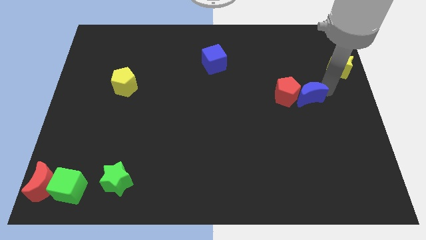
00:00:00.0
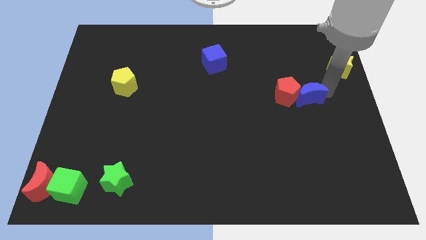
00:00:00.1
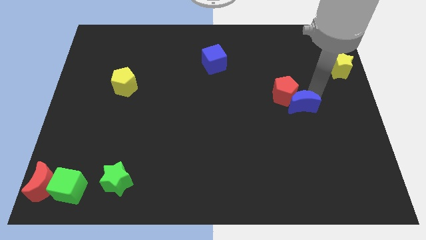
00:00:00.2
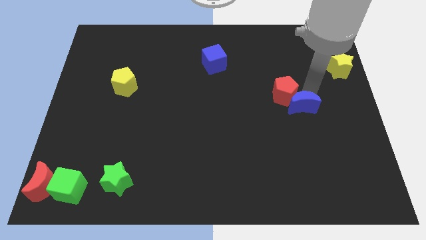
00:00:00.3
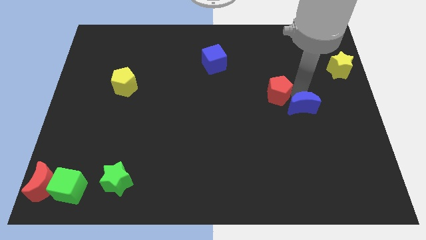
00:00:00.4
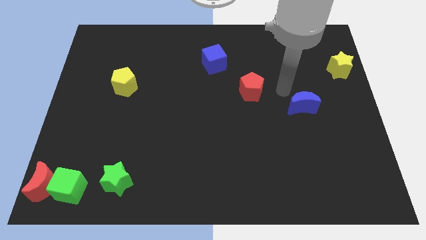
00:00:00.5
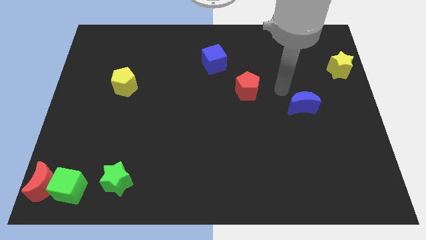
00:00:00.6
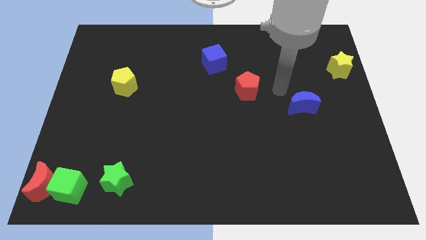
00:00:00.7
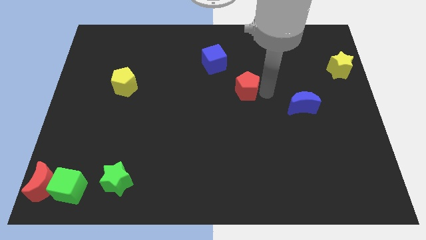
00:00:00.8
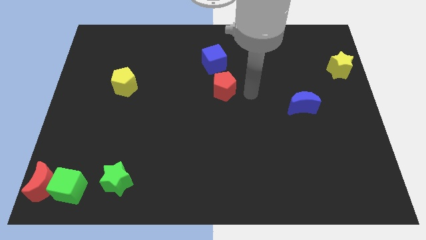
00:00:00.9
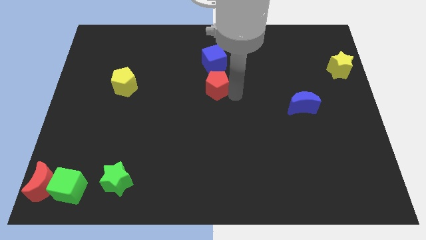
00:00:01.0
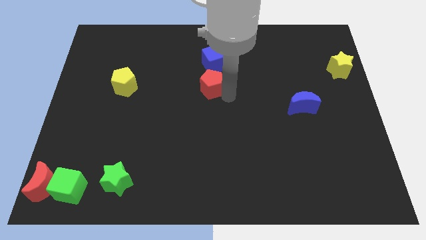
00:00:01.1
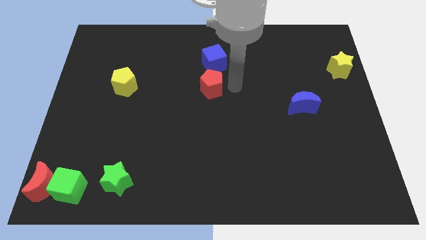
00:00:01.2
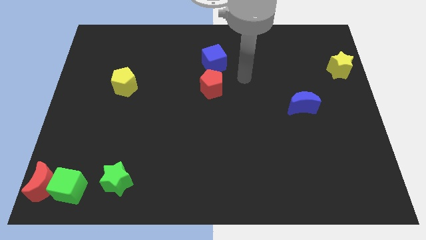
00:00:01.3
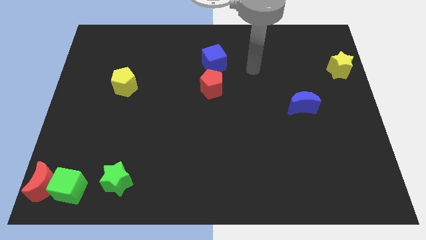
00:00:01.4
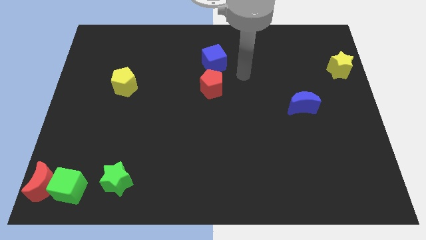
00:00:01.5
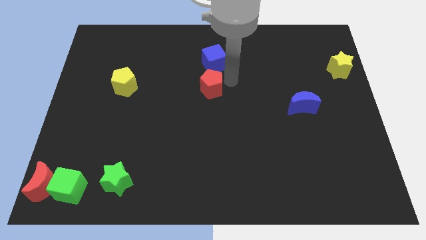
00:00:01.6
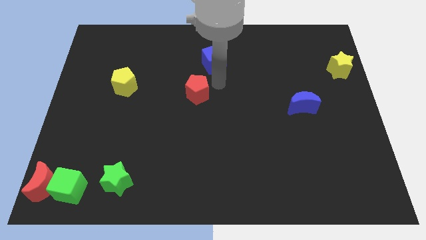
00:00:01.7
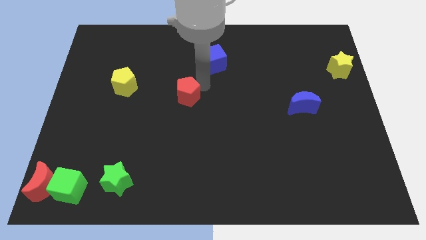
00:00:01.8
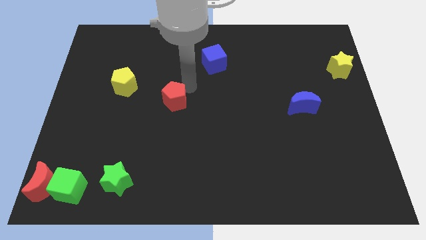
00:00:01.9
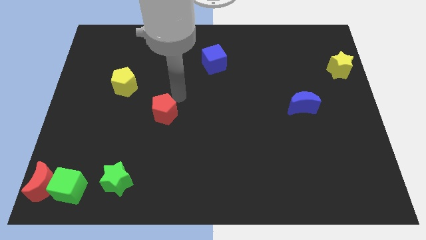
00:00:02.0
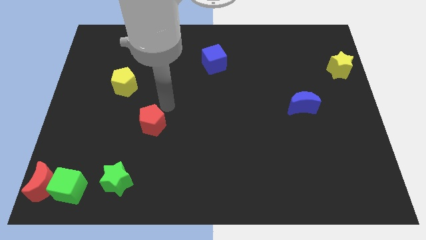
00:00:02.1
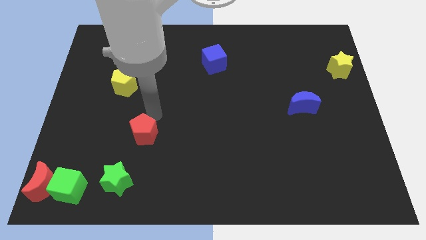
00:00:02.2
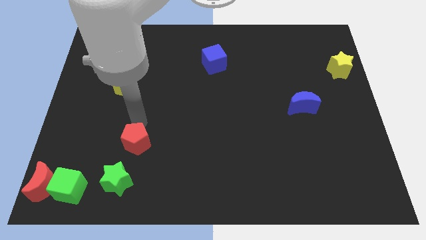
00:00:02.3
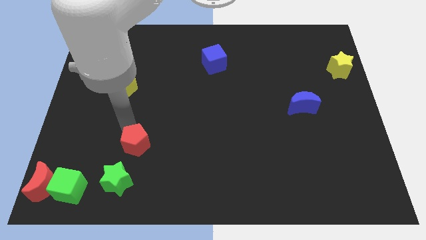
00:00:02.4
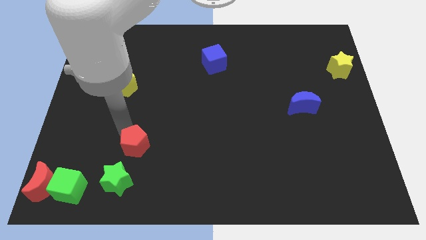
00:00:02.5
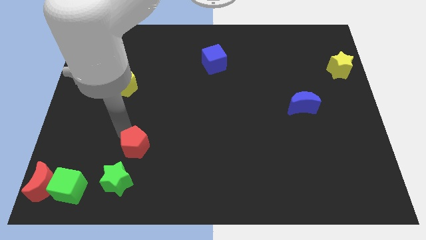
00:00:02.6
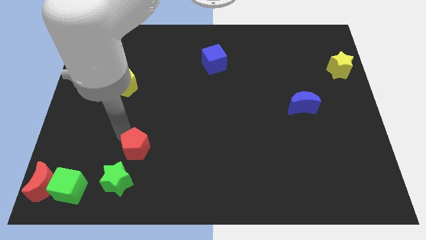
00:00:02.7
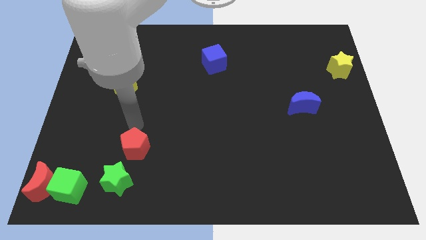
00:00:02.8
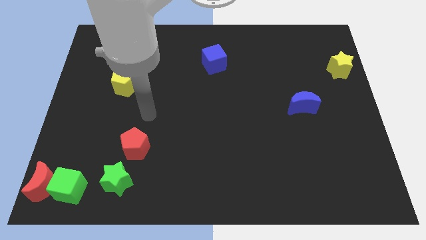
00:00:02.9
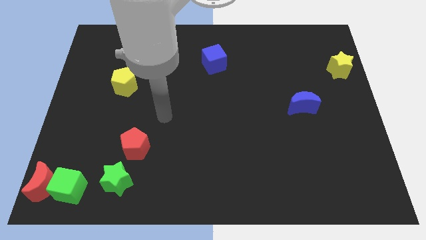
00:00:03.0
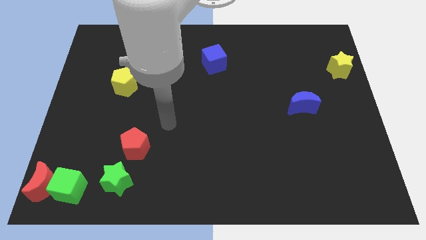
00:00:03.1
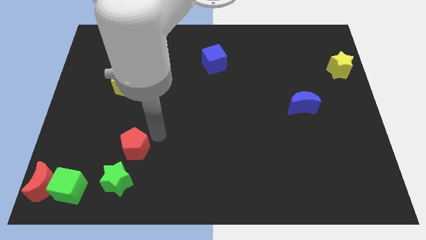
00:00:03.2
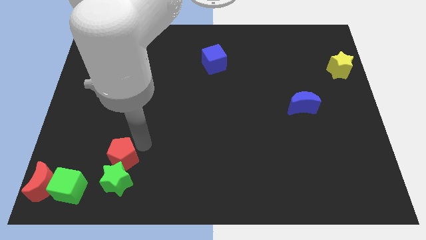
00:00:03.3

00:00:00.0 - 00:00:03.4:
place the red petagon in between the yellow pentagon and green star

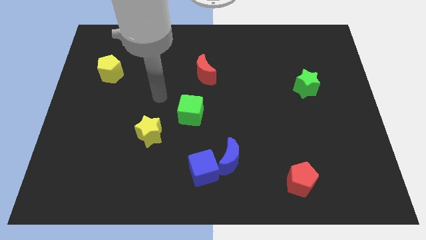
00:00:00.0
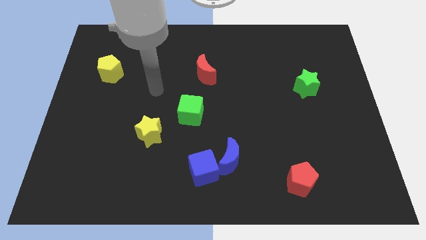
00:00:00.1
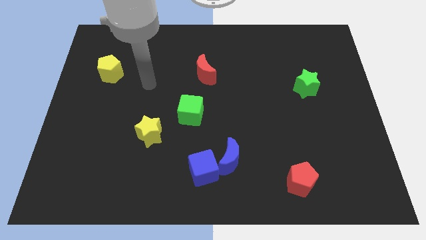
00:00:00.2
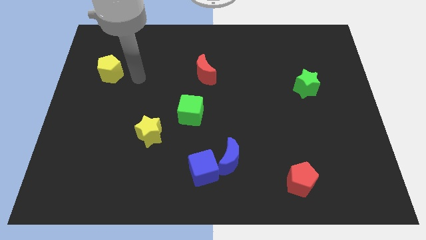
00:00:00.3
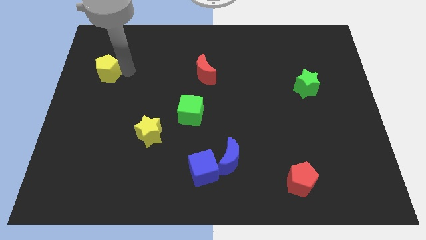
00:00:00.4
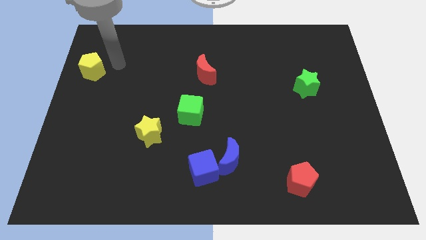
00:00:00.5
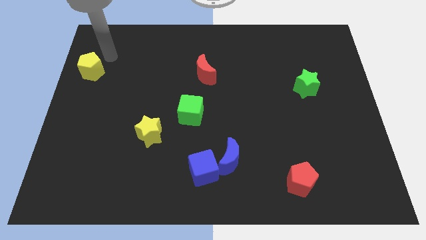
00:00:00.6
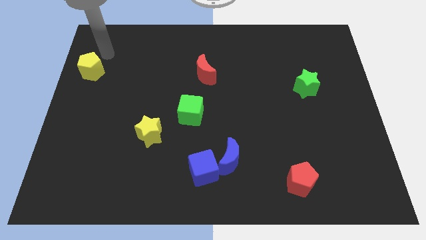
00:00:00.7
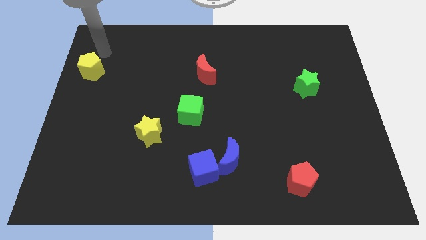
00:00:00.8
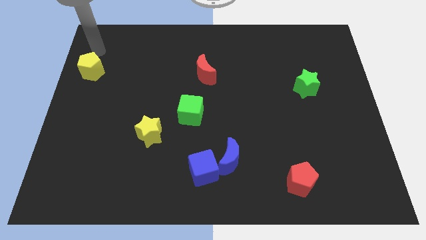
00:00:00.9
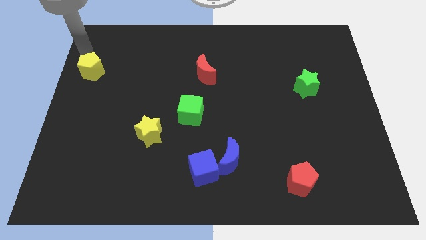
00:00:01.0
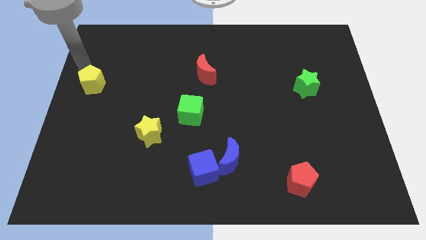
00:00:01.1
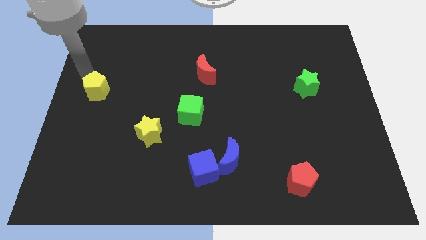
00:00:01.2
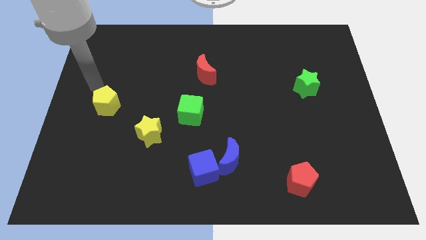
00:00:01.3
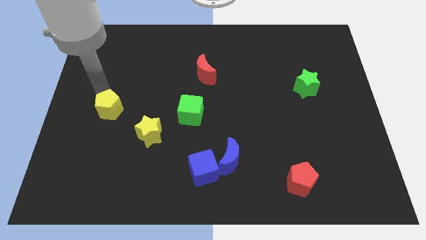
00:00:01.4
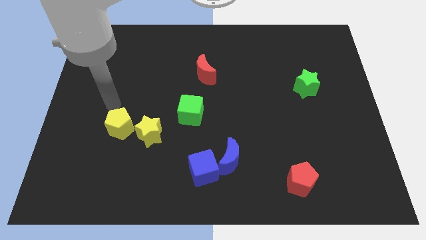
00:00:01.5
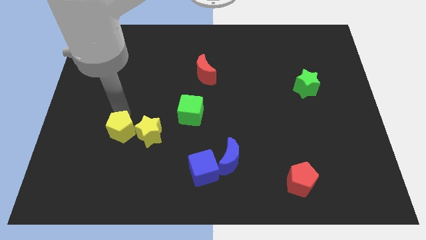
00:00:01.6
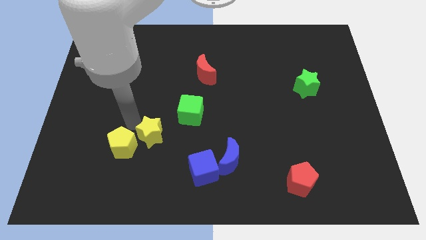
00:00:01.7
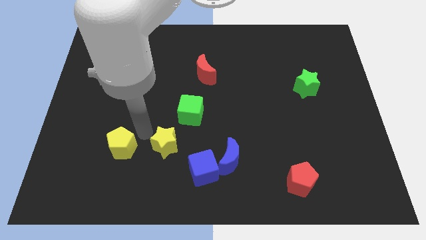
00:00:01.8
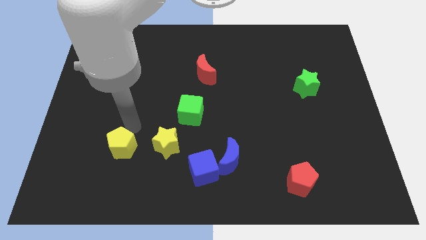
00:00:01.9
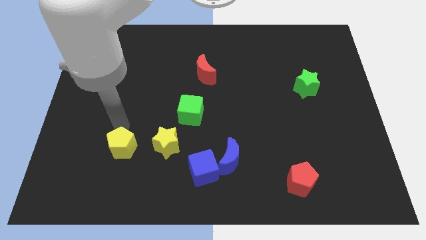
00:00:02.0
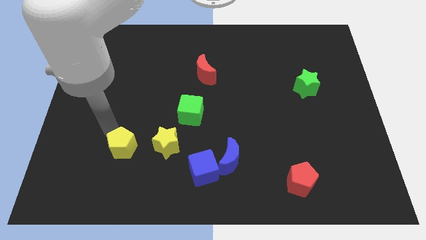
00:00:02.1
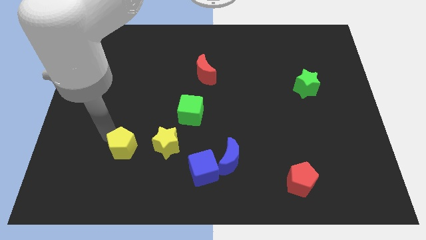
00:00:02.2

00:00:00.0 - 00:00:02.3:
place the yellow pentagon left to the yellow star

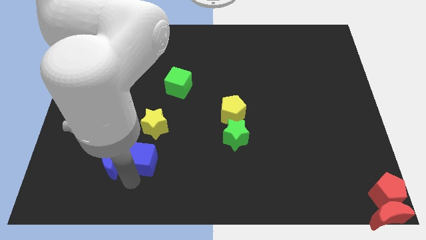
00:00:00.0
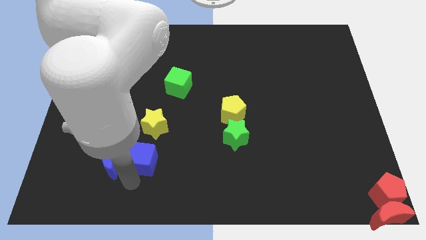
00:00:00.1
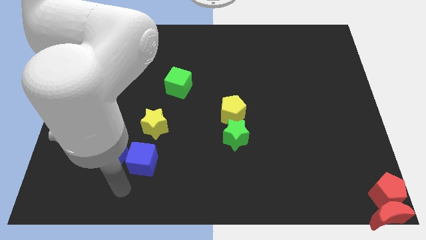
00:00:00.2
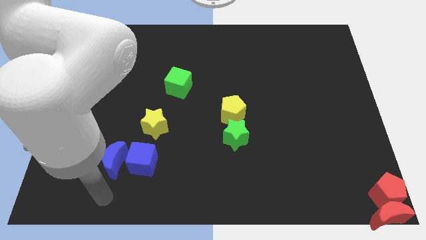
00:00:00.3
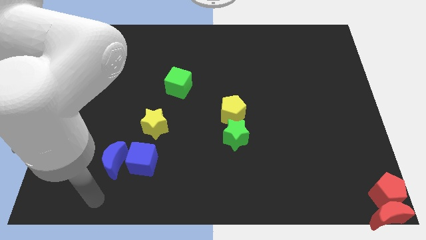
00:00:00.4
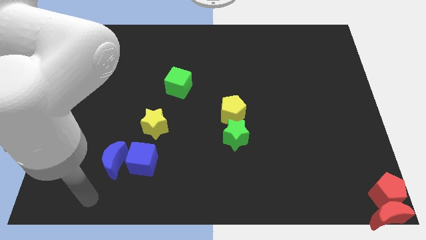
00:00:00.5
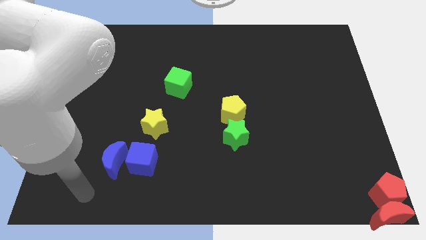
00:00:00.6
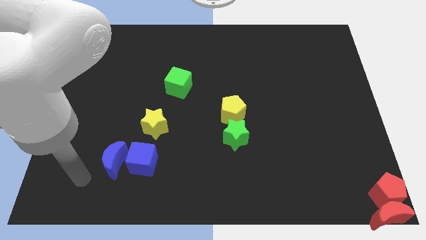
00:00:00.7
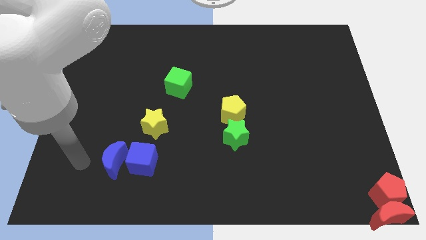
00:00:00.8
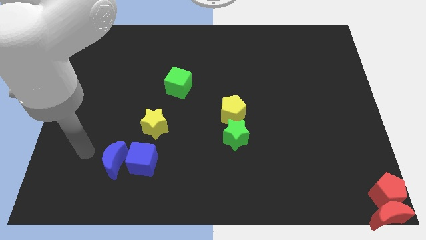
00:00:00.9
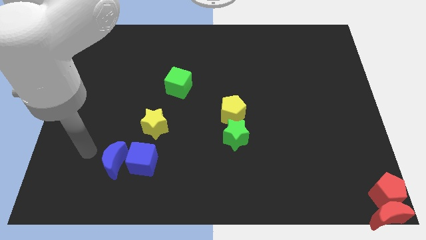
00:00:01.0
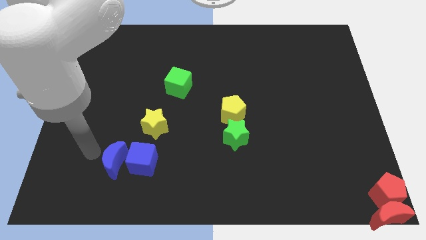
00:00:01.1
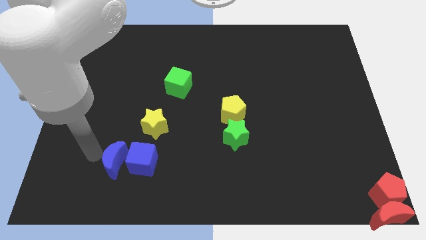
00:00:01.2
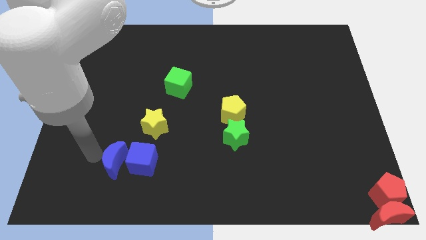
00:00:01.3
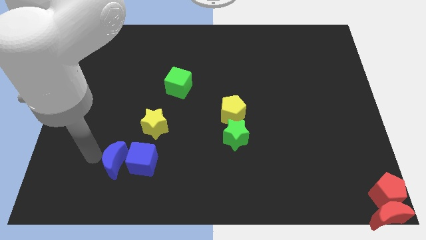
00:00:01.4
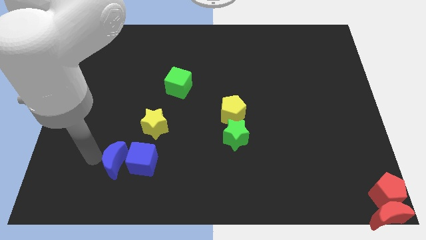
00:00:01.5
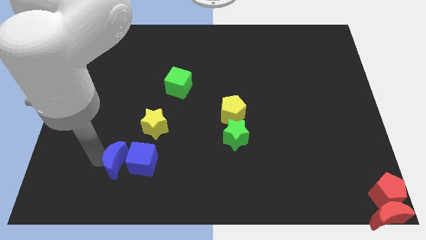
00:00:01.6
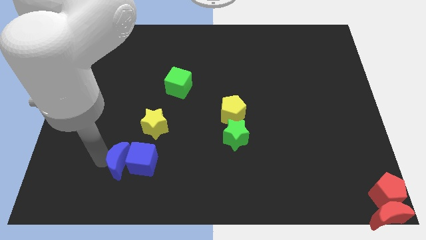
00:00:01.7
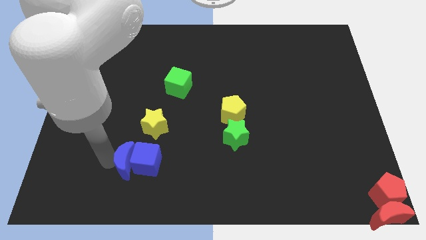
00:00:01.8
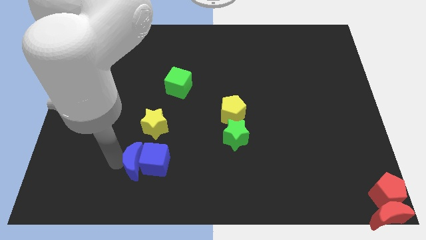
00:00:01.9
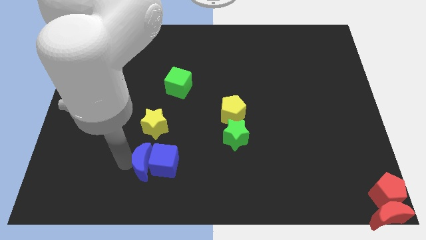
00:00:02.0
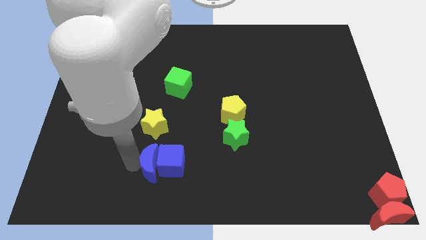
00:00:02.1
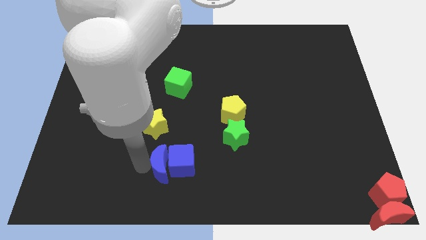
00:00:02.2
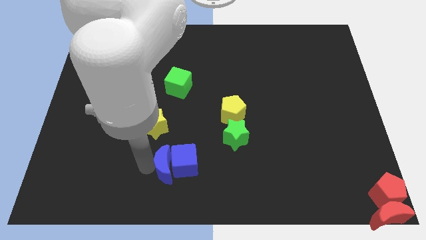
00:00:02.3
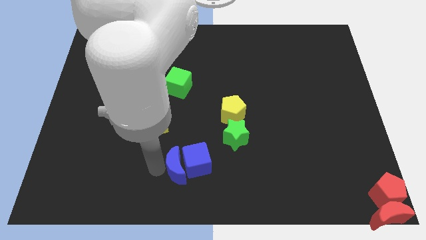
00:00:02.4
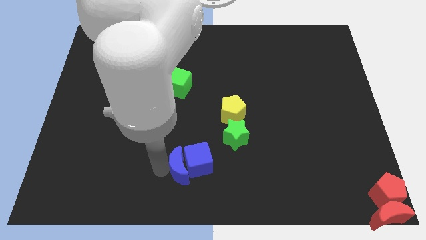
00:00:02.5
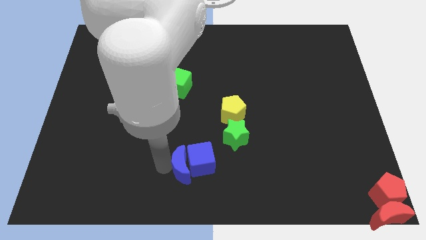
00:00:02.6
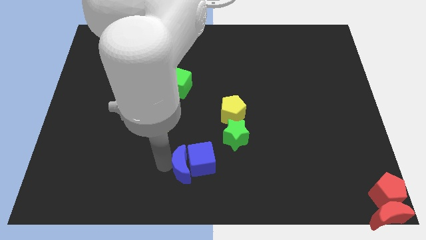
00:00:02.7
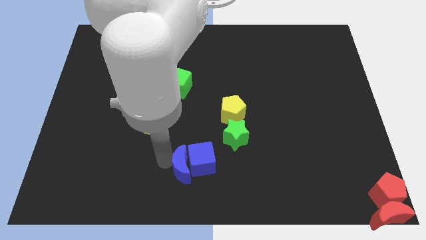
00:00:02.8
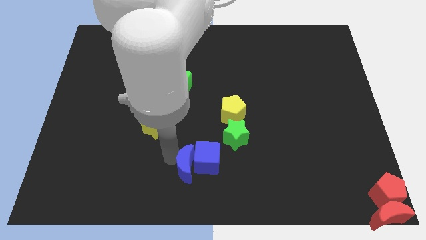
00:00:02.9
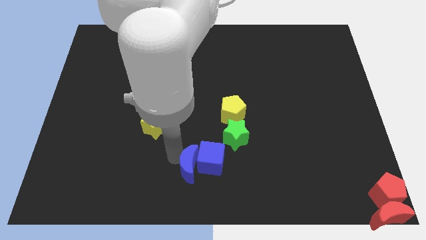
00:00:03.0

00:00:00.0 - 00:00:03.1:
push the blue cube and blue crescent towards the green star

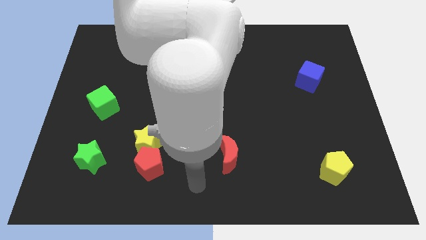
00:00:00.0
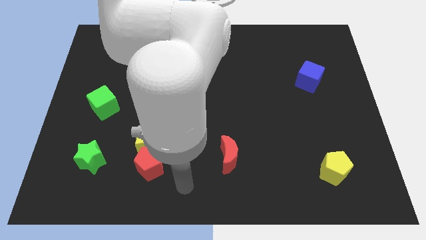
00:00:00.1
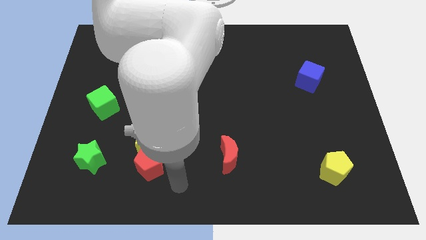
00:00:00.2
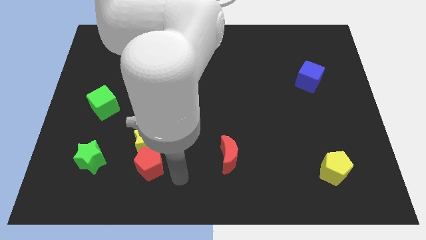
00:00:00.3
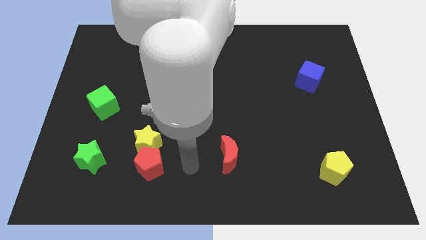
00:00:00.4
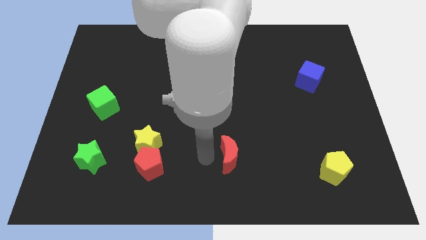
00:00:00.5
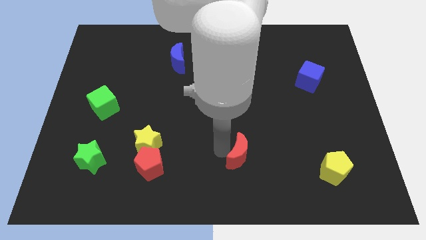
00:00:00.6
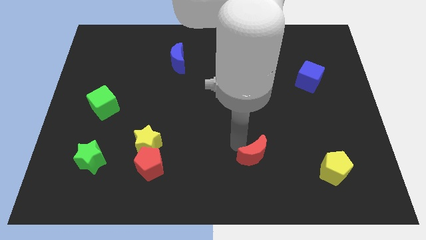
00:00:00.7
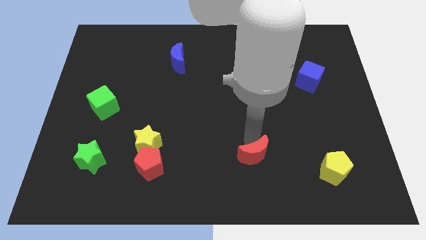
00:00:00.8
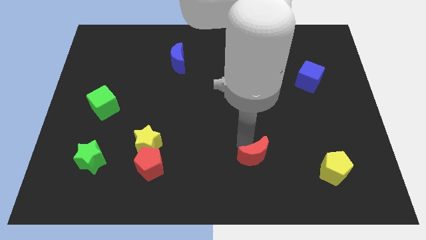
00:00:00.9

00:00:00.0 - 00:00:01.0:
move red crescent to right
